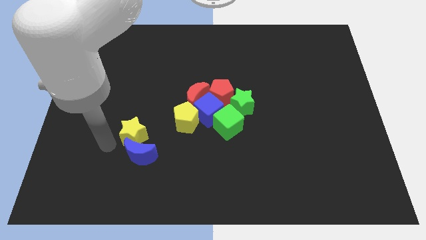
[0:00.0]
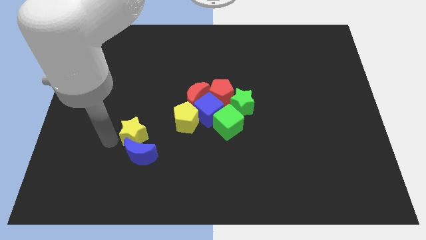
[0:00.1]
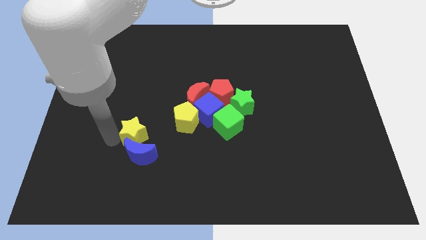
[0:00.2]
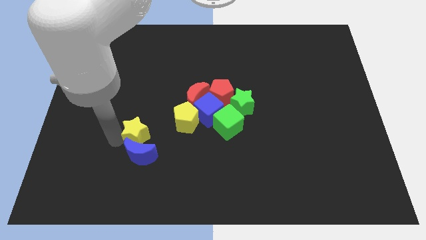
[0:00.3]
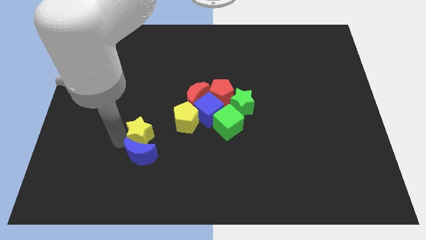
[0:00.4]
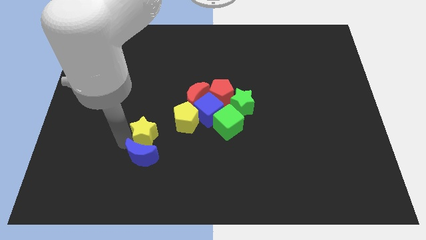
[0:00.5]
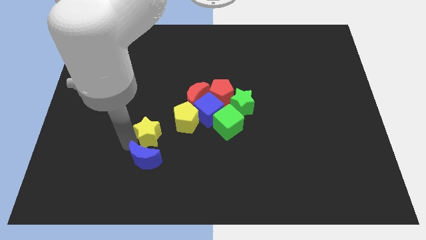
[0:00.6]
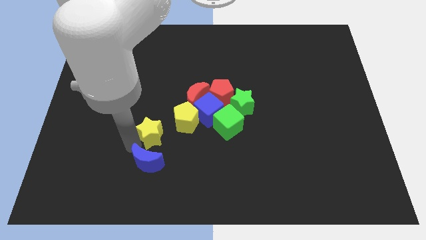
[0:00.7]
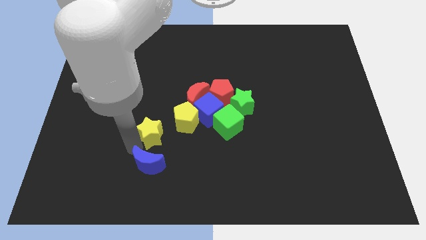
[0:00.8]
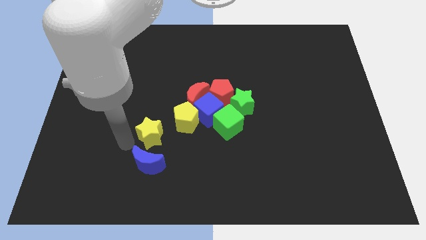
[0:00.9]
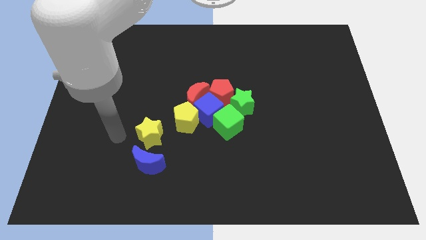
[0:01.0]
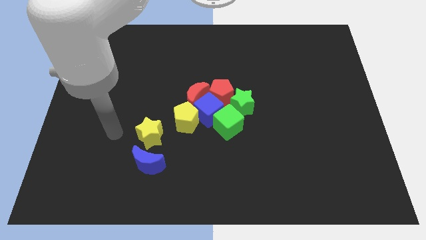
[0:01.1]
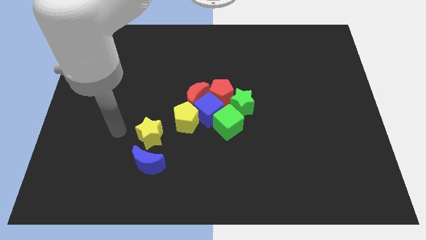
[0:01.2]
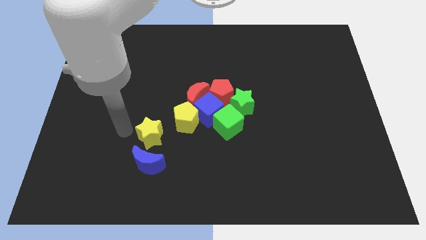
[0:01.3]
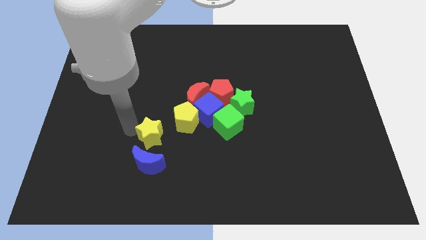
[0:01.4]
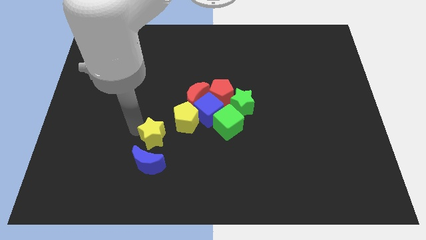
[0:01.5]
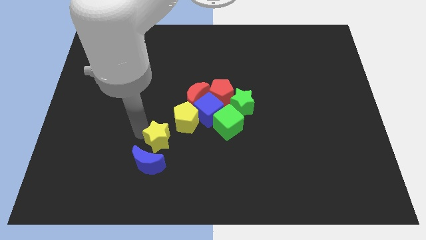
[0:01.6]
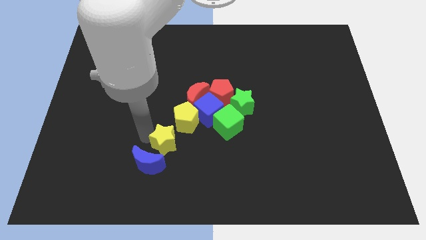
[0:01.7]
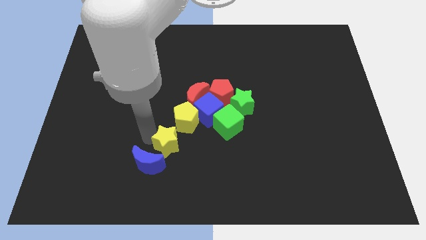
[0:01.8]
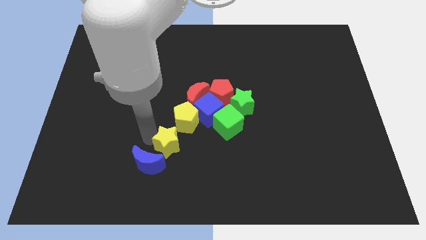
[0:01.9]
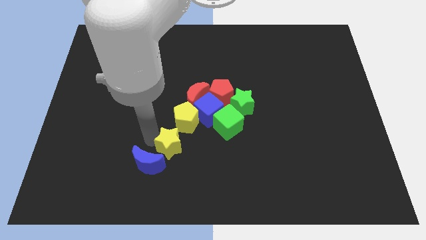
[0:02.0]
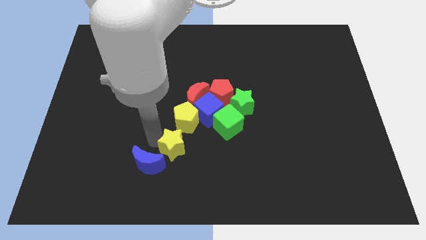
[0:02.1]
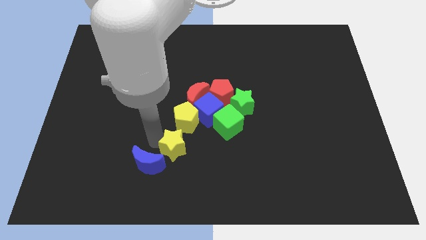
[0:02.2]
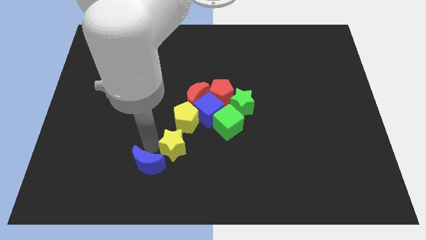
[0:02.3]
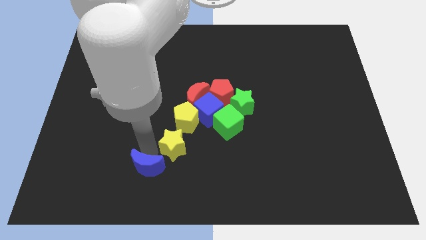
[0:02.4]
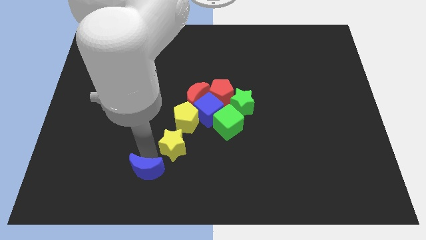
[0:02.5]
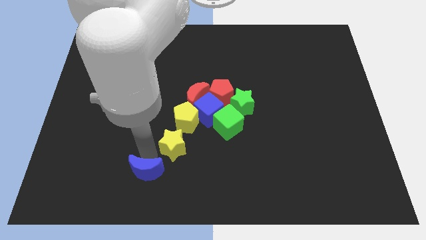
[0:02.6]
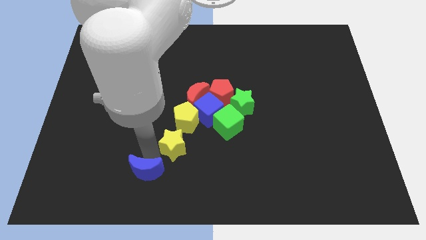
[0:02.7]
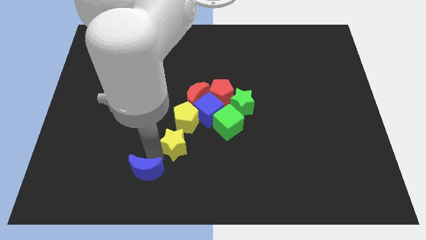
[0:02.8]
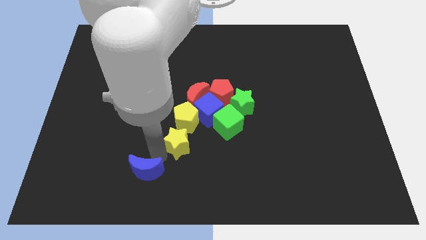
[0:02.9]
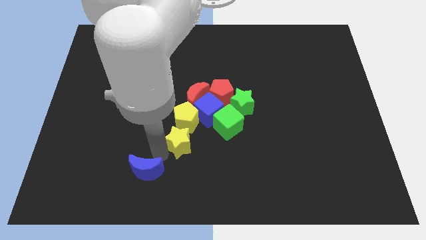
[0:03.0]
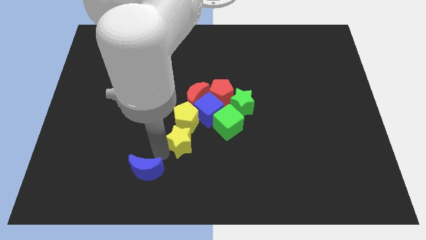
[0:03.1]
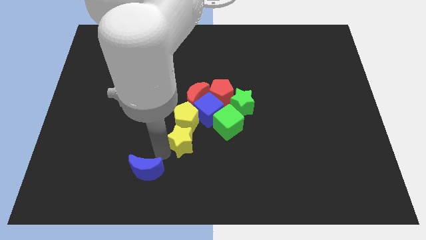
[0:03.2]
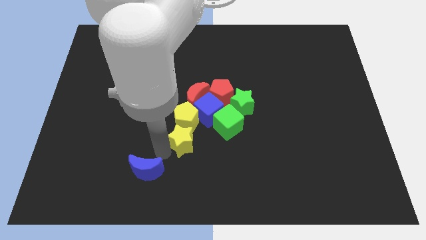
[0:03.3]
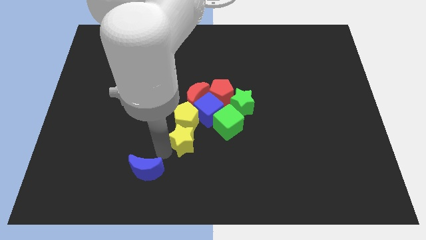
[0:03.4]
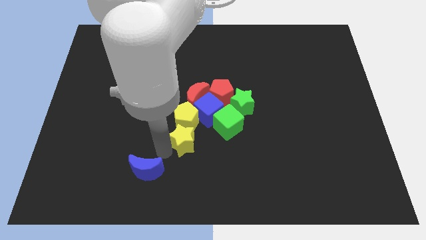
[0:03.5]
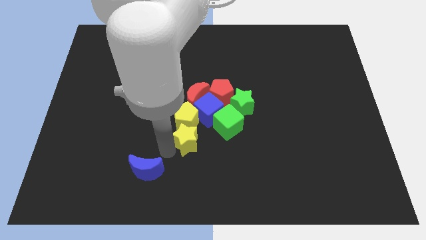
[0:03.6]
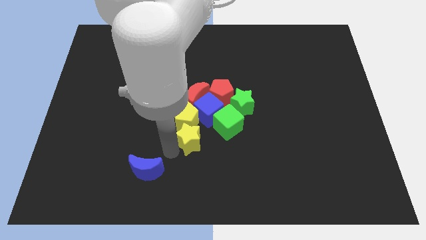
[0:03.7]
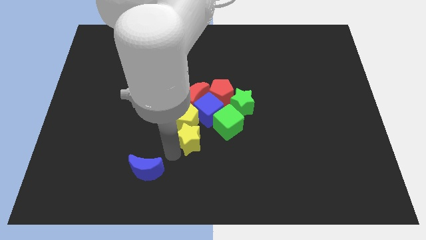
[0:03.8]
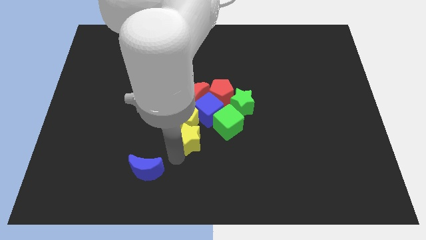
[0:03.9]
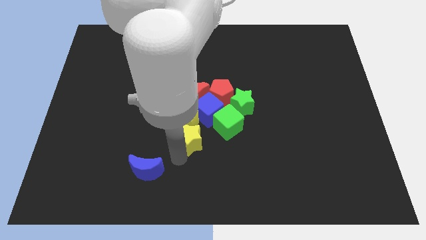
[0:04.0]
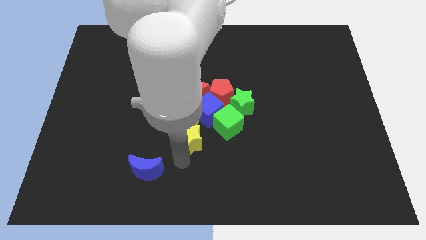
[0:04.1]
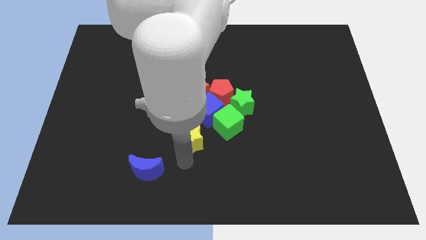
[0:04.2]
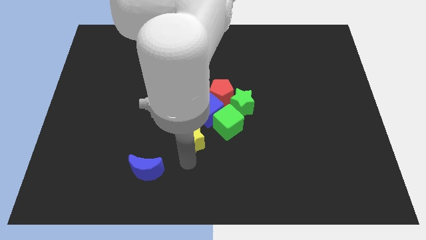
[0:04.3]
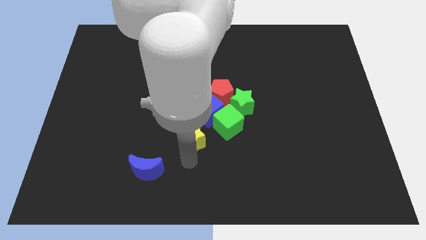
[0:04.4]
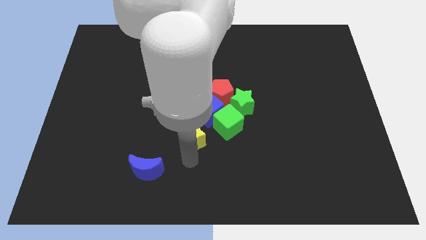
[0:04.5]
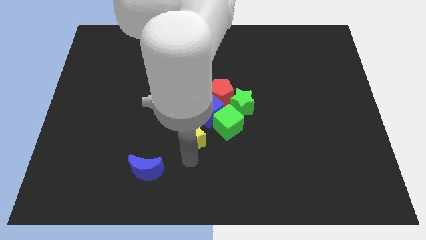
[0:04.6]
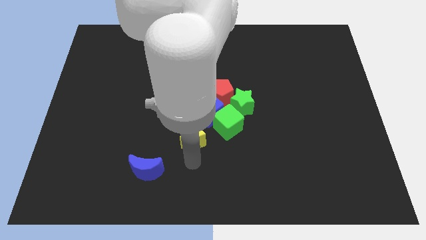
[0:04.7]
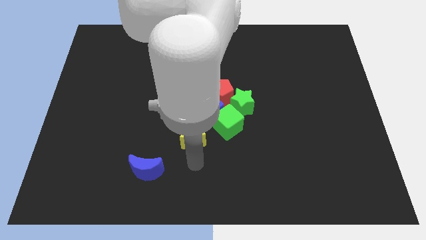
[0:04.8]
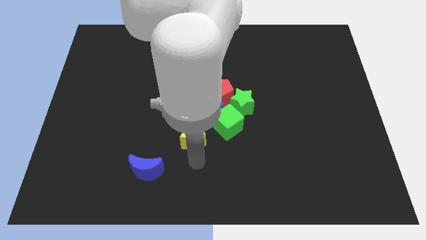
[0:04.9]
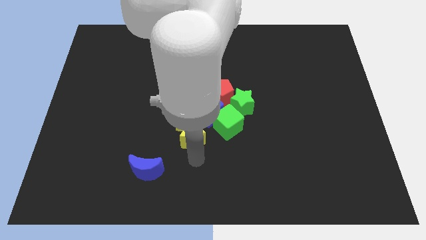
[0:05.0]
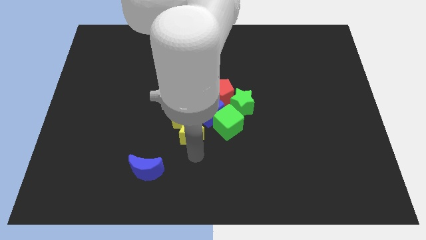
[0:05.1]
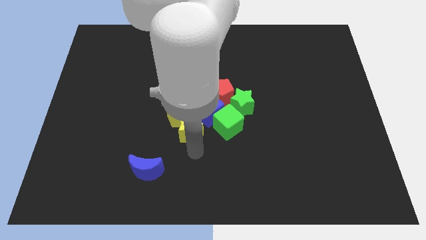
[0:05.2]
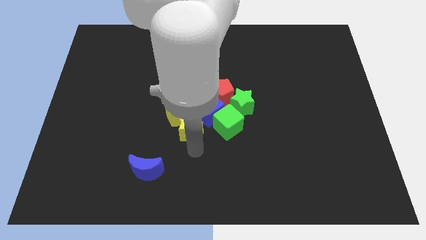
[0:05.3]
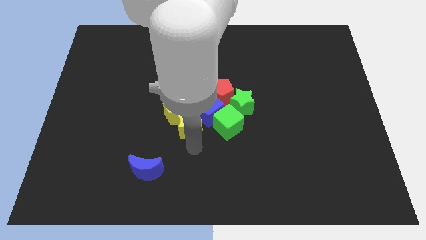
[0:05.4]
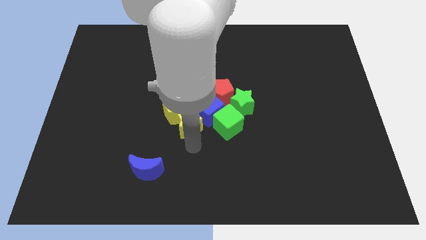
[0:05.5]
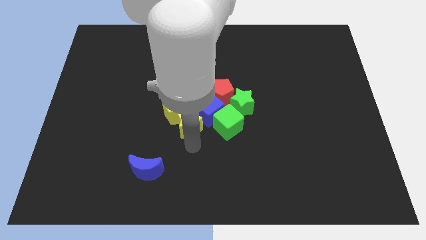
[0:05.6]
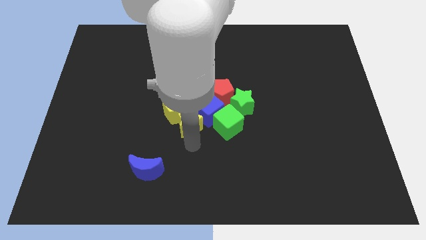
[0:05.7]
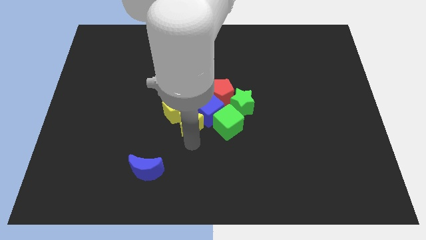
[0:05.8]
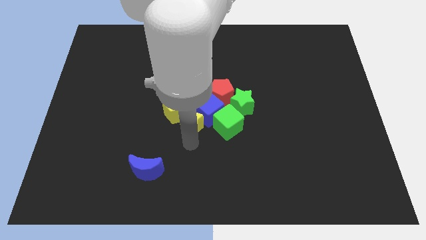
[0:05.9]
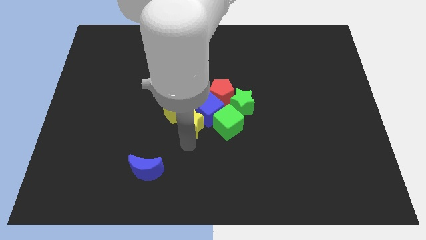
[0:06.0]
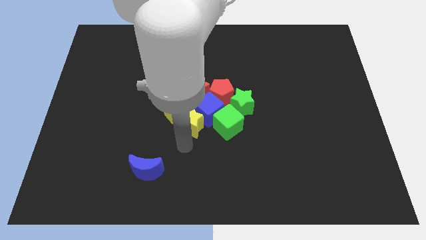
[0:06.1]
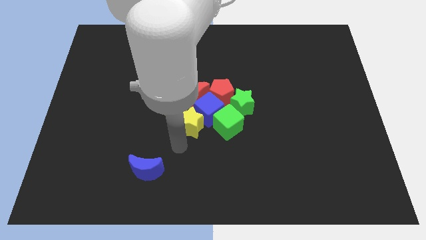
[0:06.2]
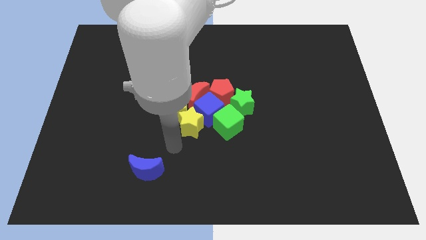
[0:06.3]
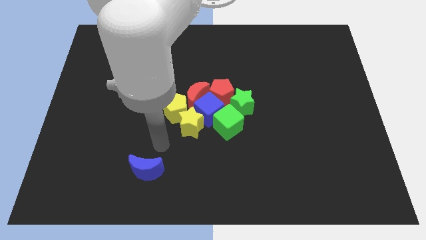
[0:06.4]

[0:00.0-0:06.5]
push the yellow star to the right side of the yellow pentagon

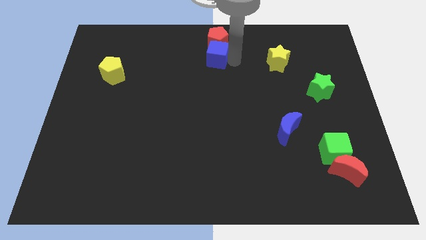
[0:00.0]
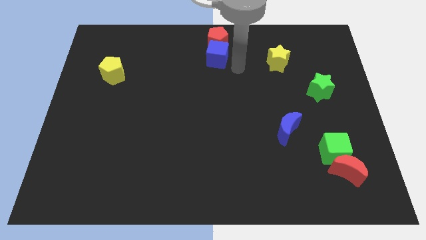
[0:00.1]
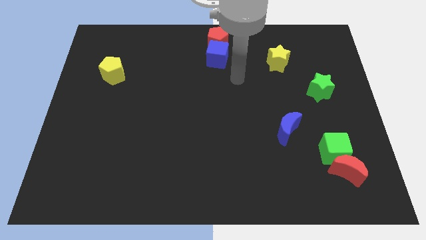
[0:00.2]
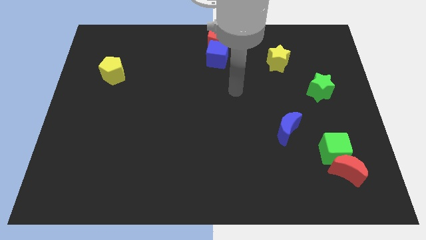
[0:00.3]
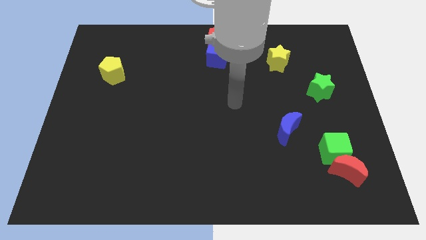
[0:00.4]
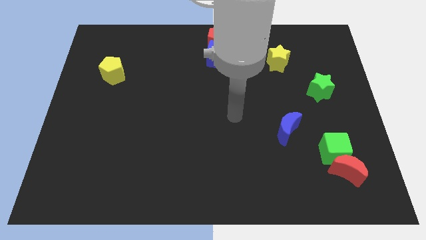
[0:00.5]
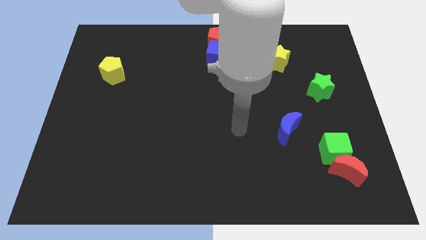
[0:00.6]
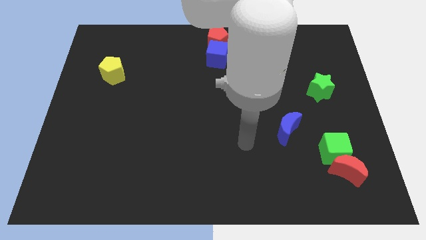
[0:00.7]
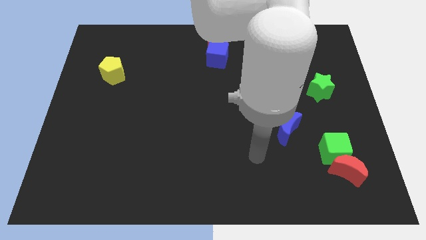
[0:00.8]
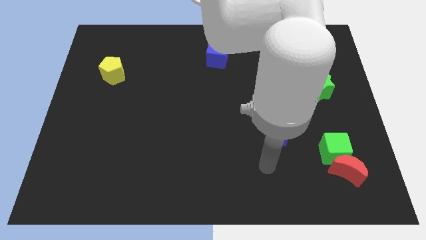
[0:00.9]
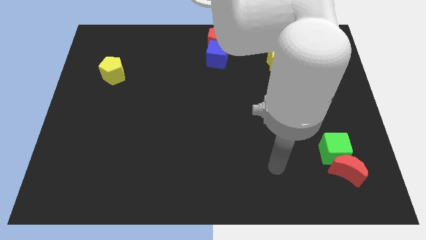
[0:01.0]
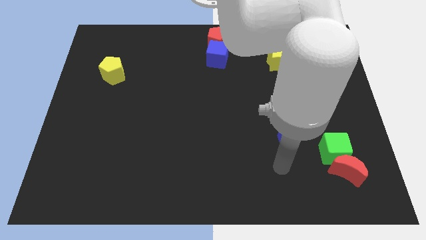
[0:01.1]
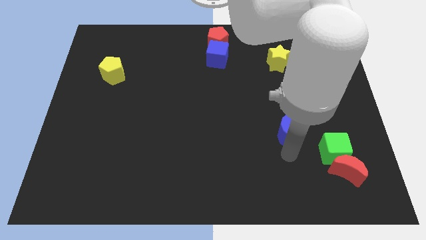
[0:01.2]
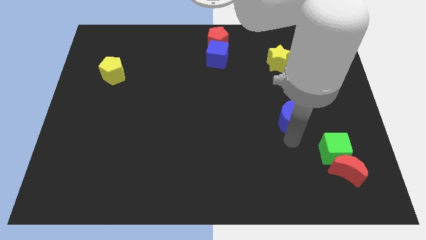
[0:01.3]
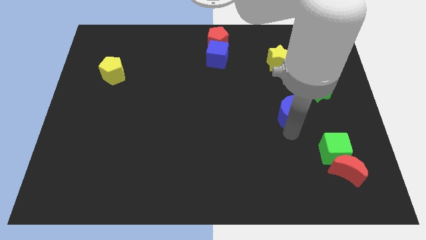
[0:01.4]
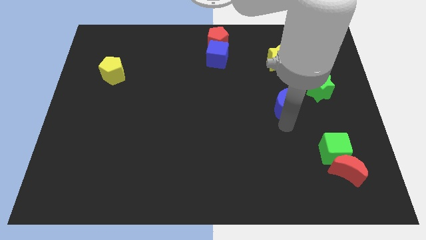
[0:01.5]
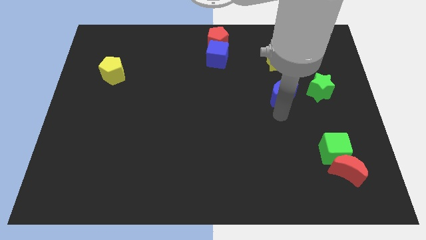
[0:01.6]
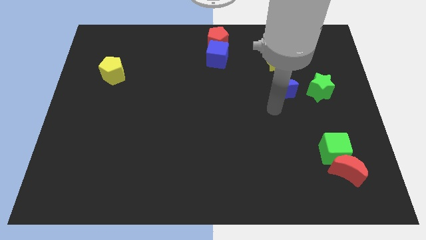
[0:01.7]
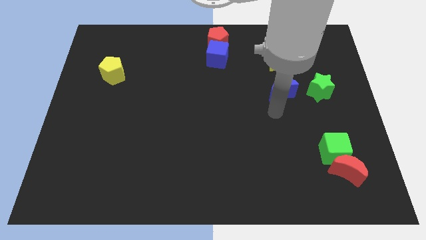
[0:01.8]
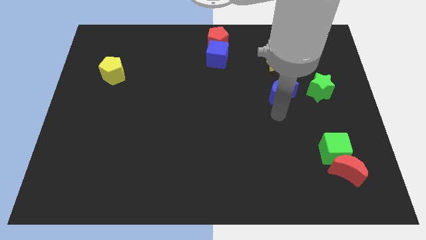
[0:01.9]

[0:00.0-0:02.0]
push blue moon to the bottom of the yellow star

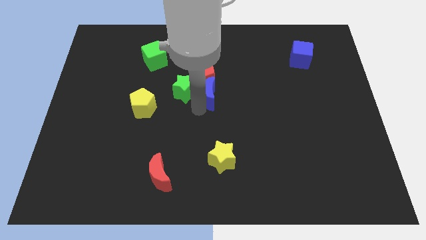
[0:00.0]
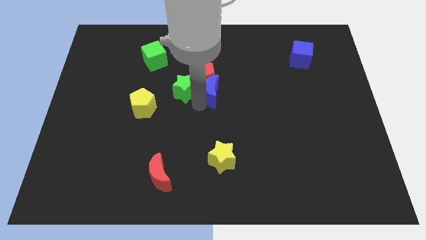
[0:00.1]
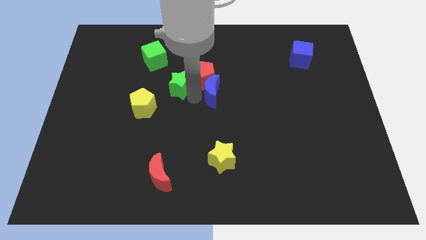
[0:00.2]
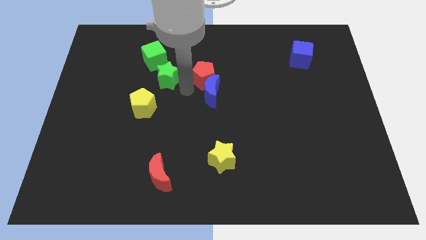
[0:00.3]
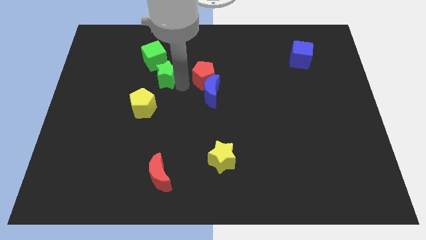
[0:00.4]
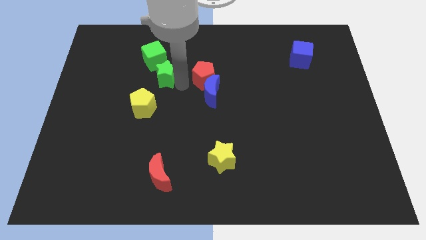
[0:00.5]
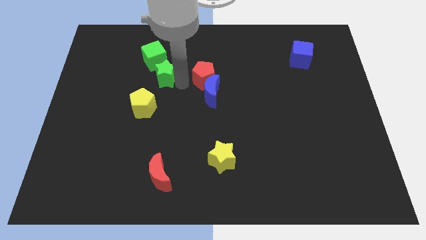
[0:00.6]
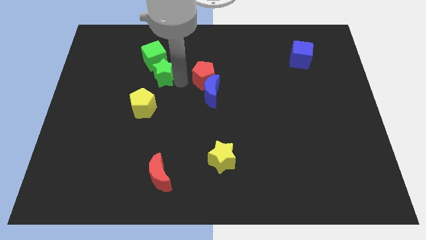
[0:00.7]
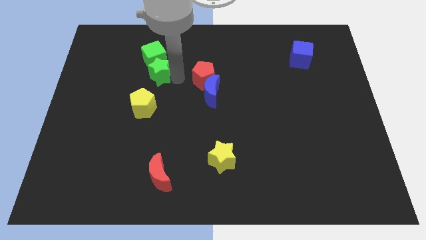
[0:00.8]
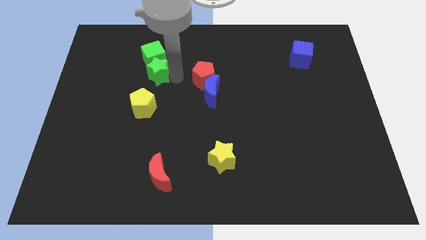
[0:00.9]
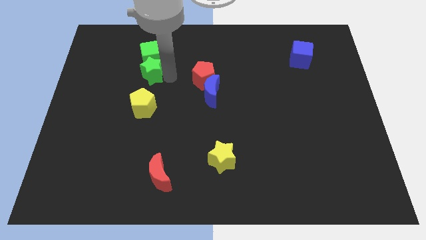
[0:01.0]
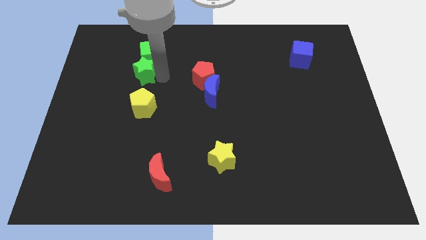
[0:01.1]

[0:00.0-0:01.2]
push the green star into the green cube
